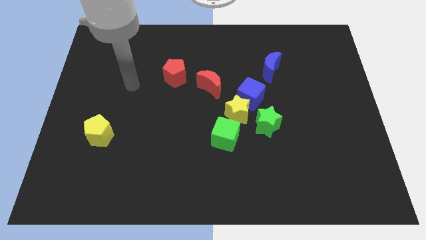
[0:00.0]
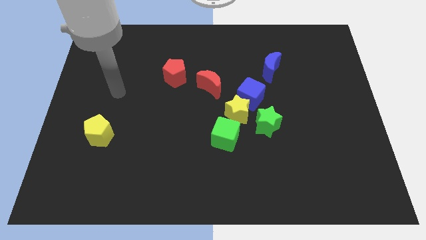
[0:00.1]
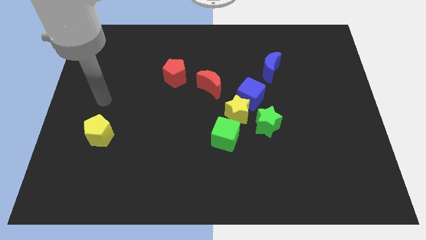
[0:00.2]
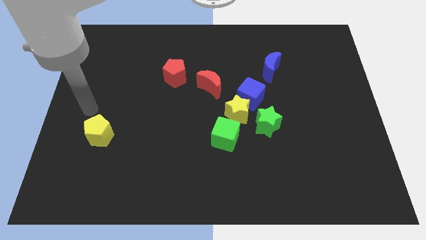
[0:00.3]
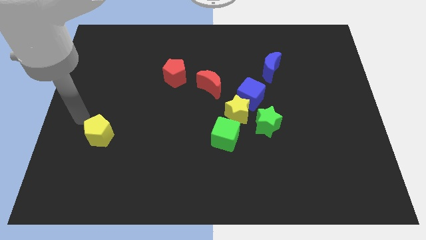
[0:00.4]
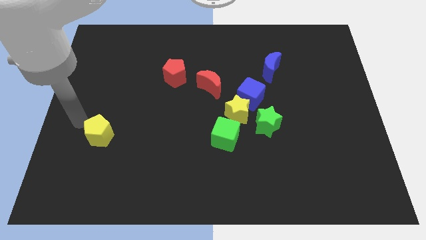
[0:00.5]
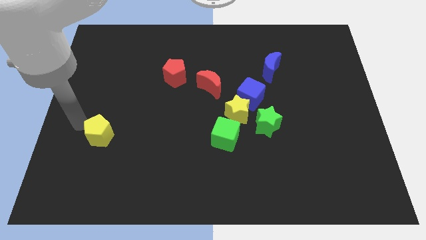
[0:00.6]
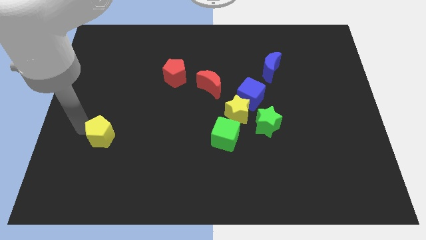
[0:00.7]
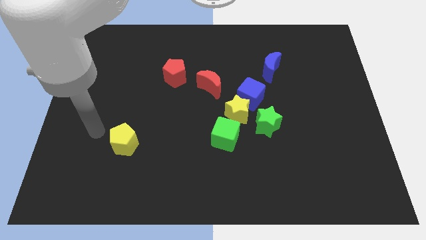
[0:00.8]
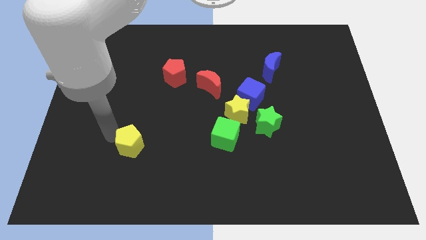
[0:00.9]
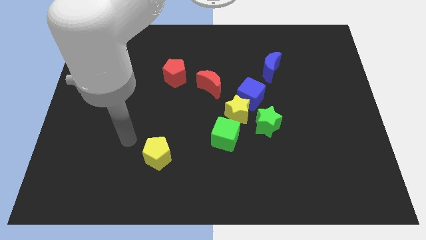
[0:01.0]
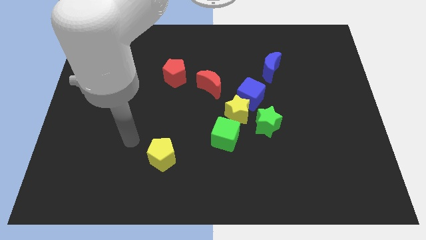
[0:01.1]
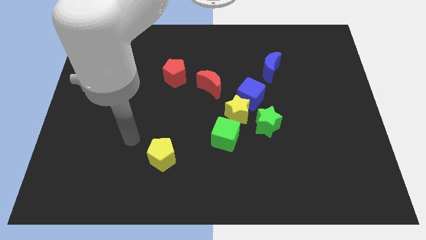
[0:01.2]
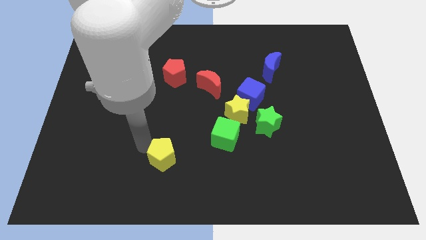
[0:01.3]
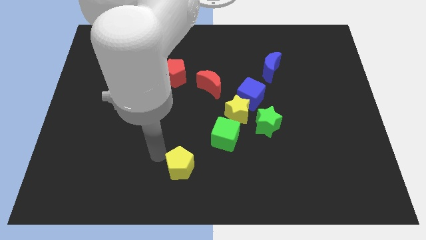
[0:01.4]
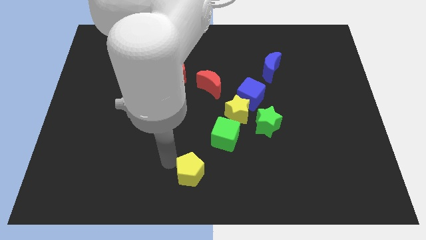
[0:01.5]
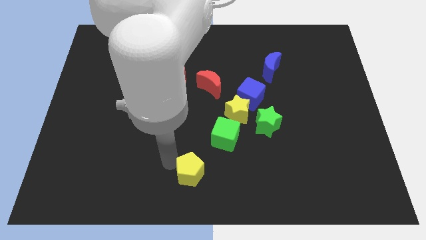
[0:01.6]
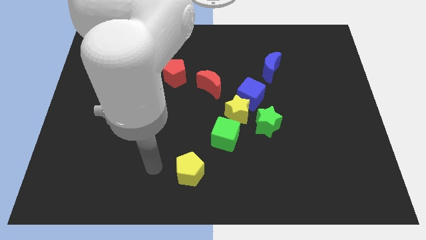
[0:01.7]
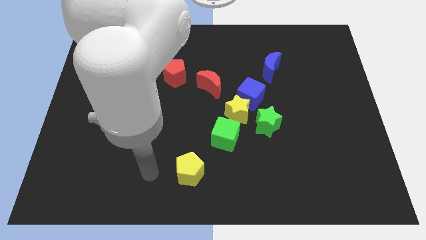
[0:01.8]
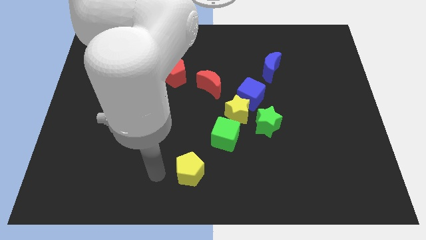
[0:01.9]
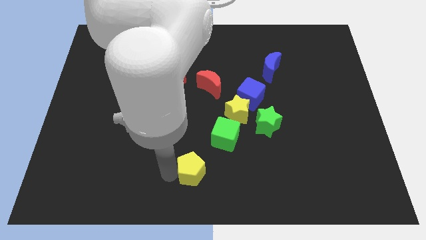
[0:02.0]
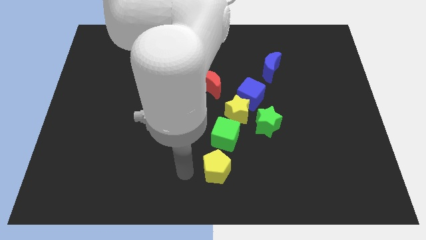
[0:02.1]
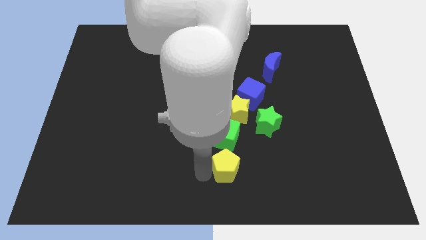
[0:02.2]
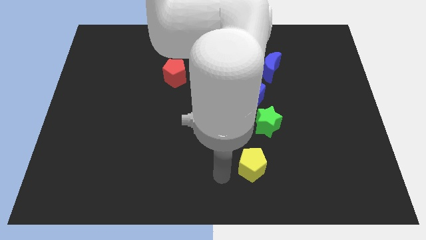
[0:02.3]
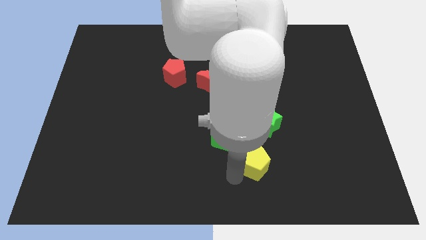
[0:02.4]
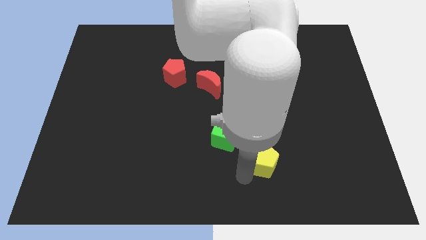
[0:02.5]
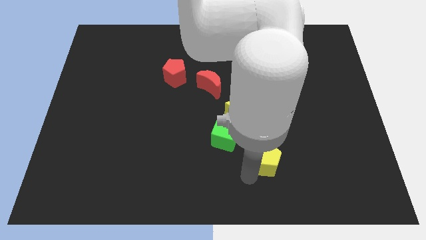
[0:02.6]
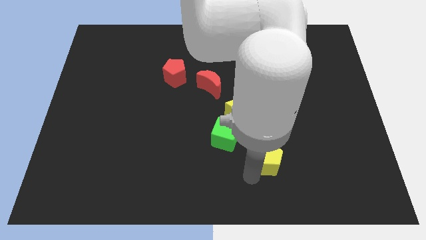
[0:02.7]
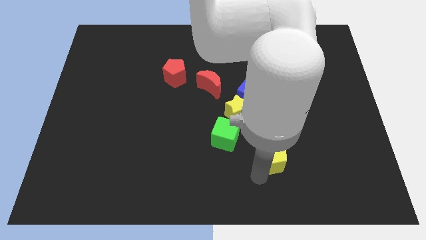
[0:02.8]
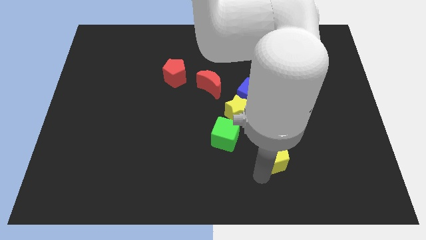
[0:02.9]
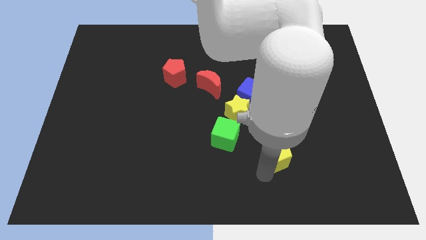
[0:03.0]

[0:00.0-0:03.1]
slide the yellow pentagon to the right side of the board

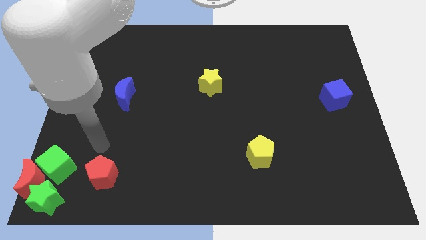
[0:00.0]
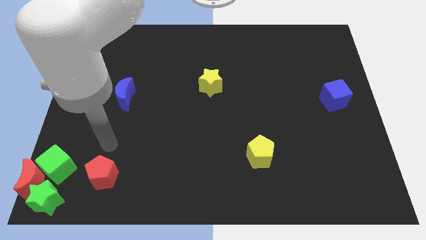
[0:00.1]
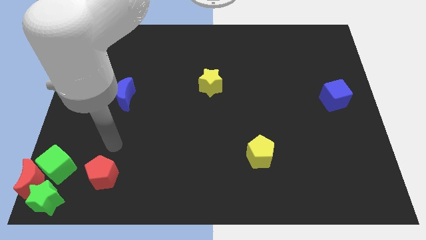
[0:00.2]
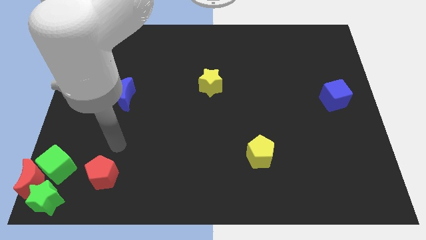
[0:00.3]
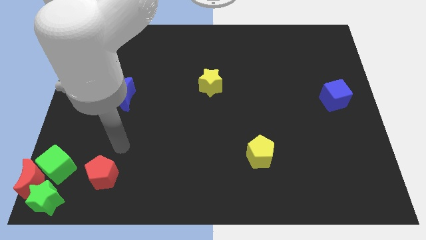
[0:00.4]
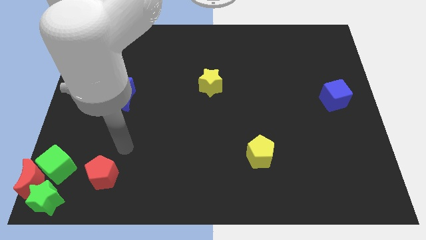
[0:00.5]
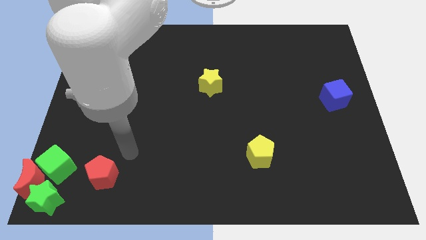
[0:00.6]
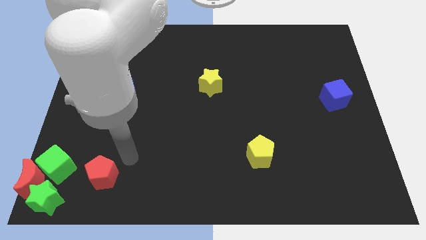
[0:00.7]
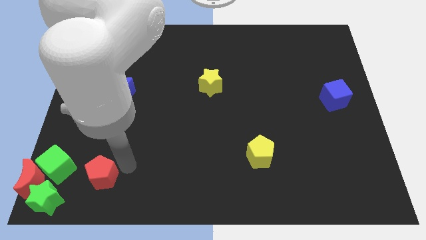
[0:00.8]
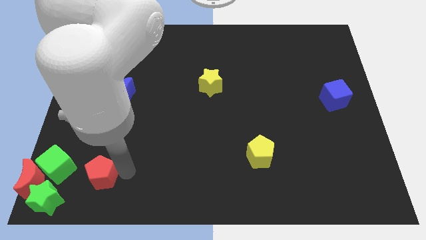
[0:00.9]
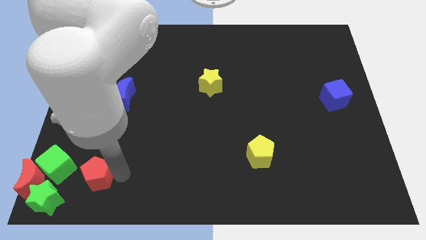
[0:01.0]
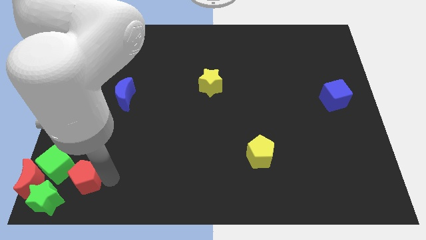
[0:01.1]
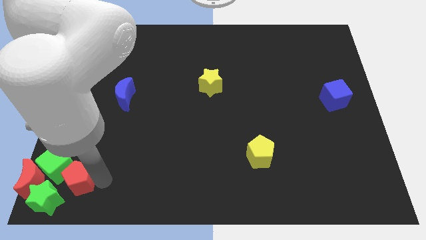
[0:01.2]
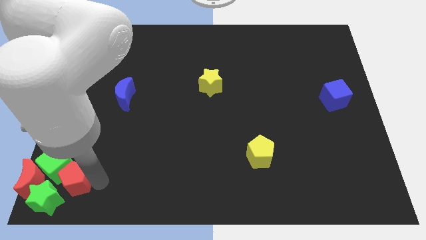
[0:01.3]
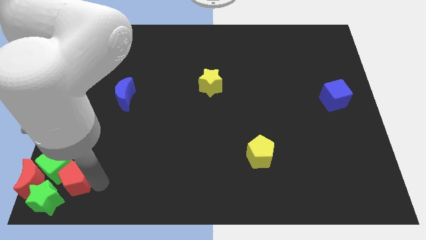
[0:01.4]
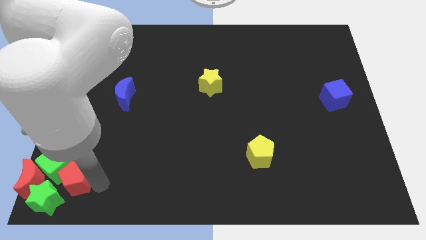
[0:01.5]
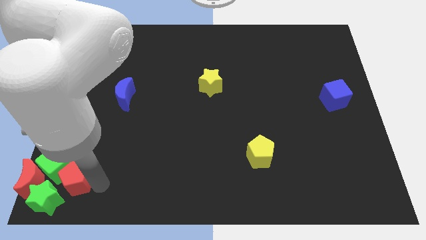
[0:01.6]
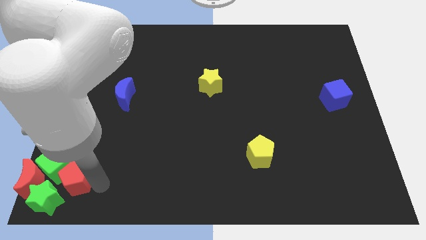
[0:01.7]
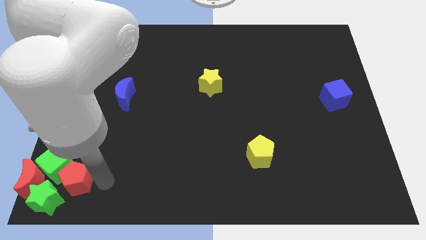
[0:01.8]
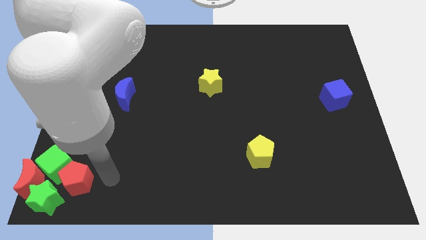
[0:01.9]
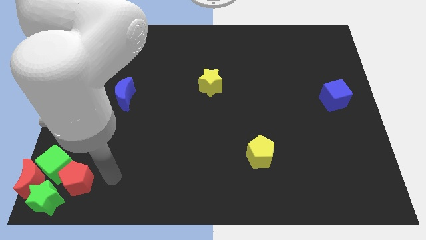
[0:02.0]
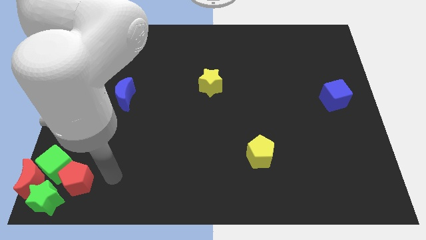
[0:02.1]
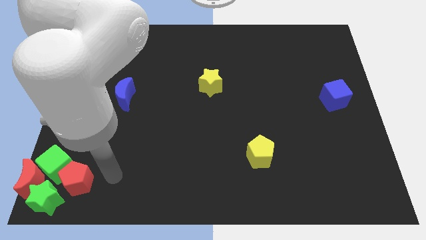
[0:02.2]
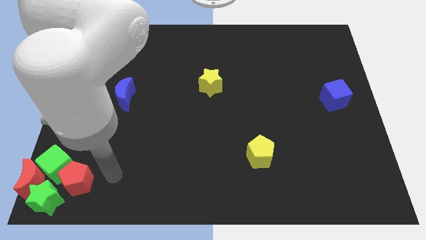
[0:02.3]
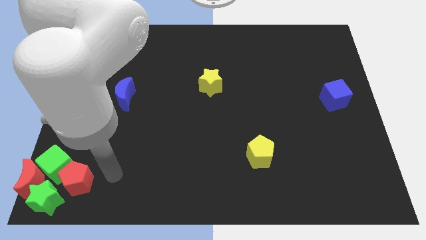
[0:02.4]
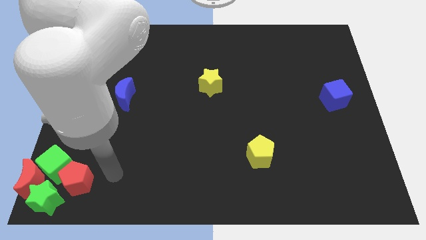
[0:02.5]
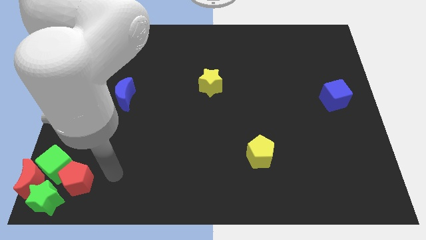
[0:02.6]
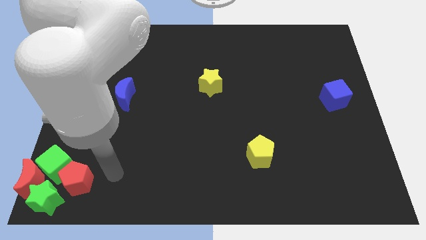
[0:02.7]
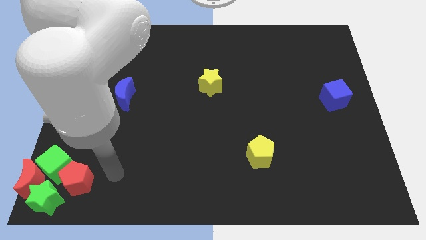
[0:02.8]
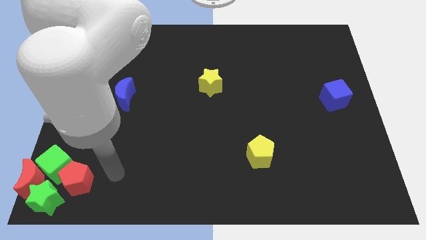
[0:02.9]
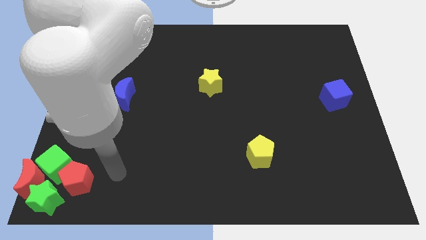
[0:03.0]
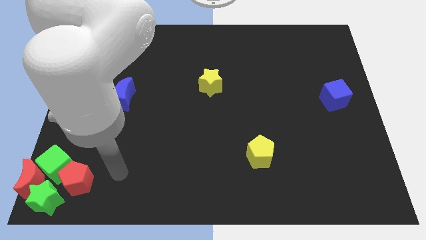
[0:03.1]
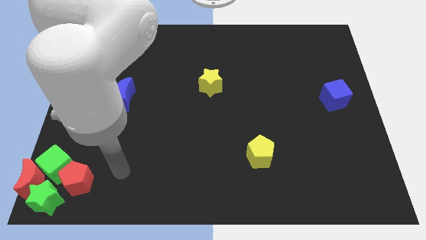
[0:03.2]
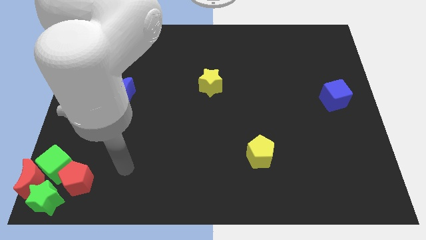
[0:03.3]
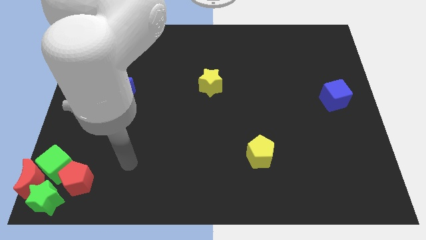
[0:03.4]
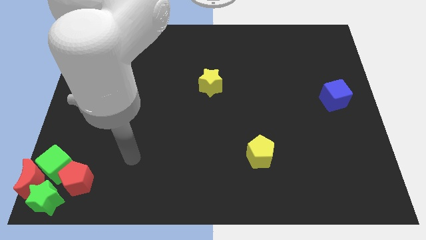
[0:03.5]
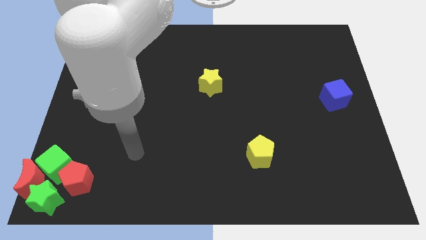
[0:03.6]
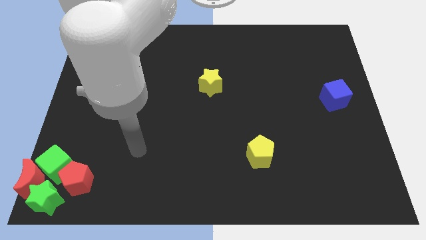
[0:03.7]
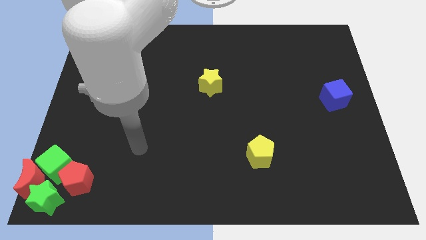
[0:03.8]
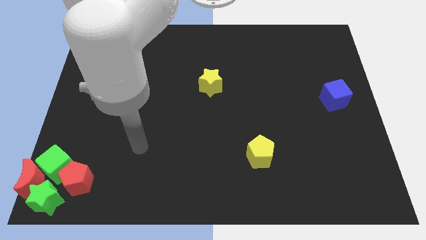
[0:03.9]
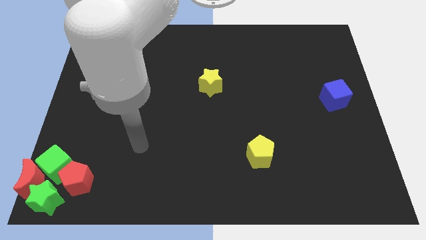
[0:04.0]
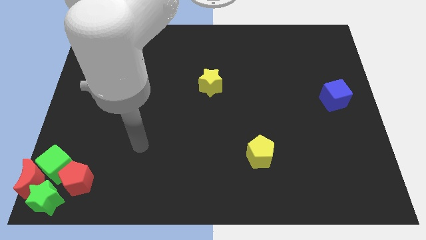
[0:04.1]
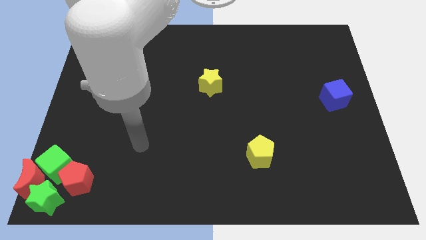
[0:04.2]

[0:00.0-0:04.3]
slide the red pentagon close to the green cube

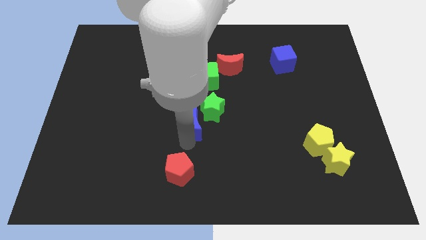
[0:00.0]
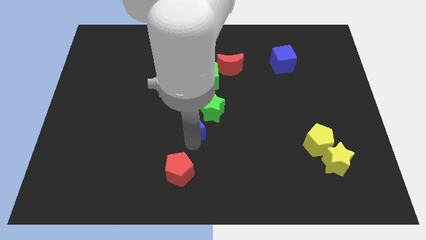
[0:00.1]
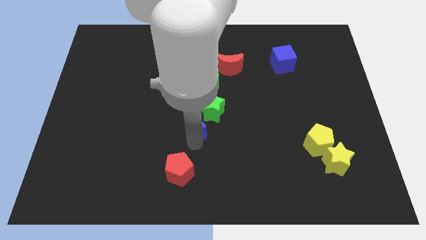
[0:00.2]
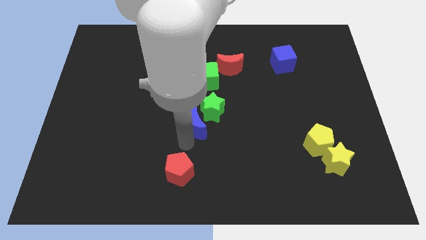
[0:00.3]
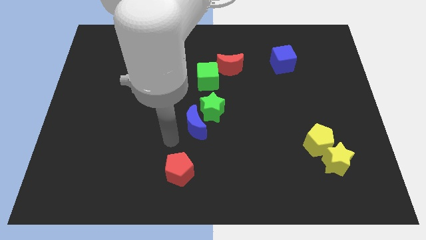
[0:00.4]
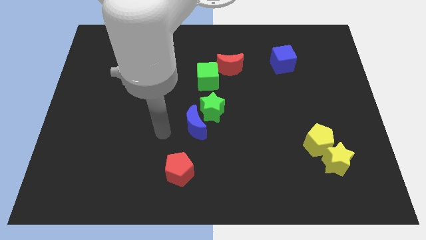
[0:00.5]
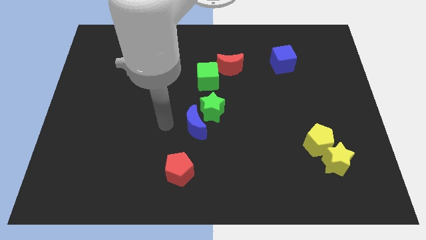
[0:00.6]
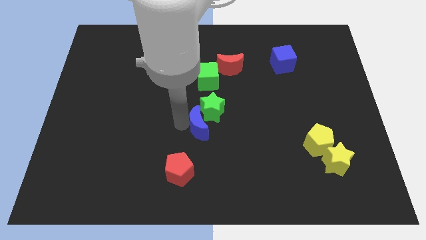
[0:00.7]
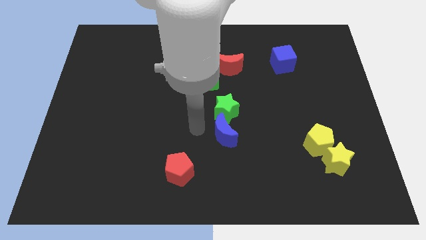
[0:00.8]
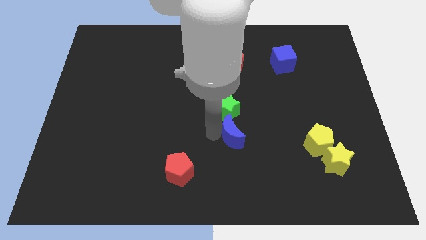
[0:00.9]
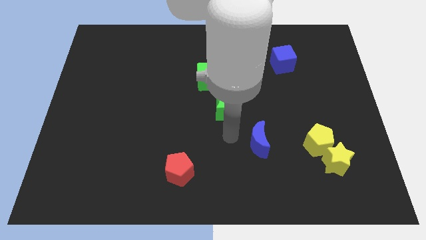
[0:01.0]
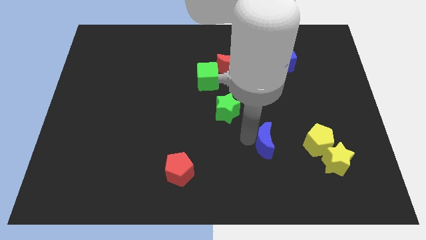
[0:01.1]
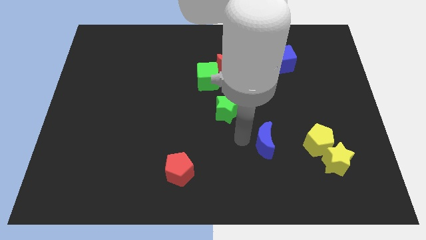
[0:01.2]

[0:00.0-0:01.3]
hit the green star with the blue moon

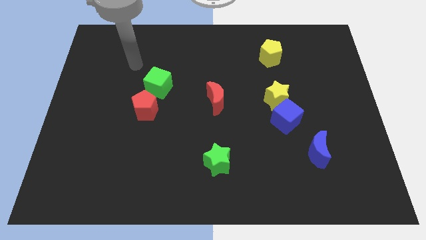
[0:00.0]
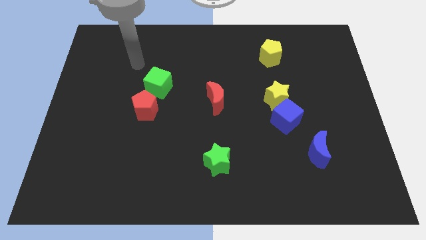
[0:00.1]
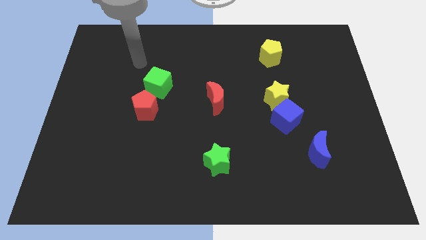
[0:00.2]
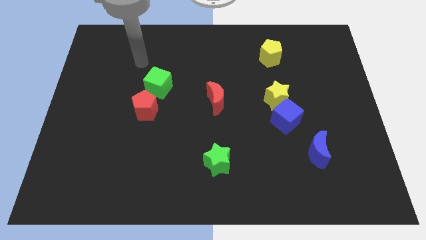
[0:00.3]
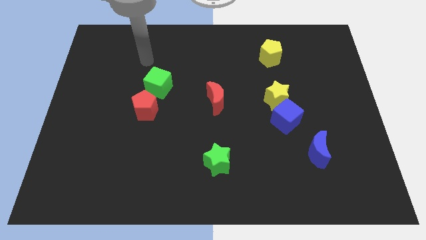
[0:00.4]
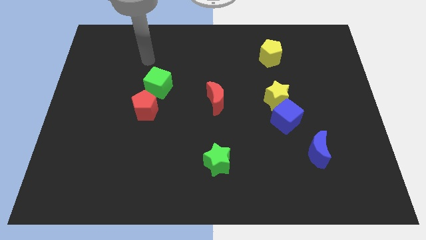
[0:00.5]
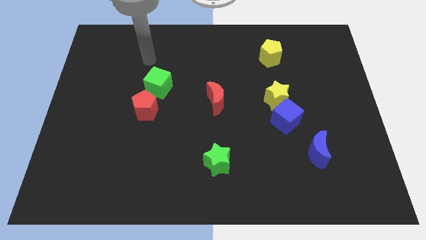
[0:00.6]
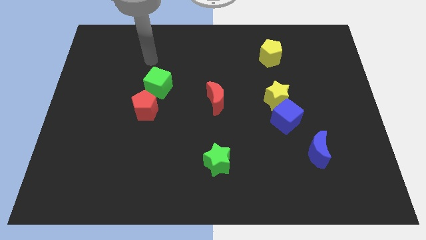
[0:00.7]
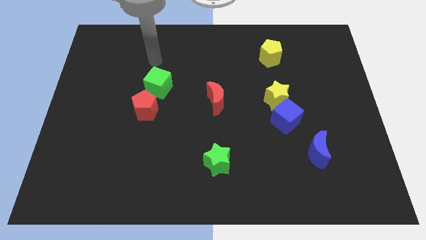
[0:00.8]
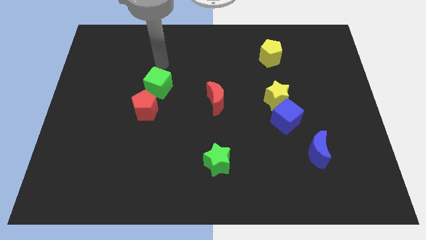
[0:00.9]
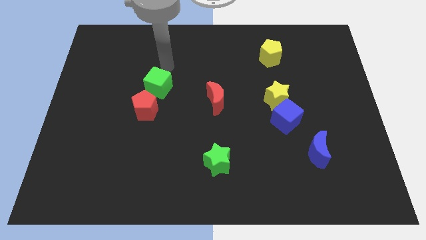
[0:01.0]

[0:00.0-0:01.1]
go close to the top side of the green cube
